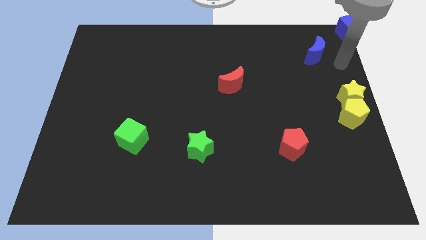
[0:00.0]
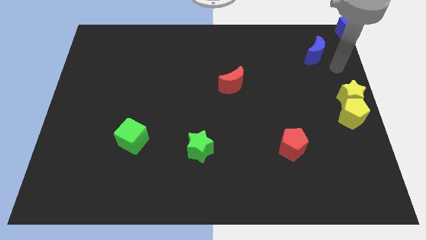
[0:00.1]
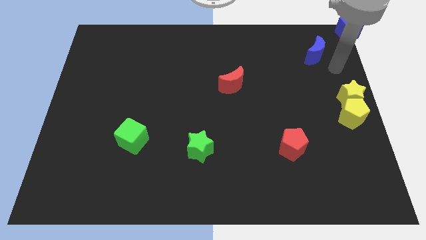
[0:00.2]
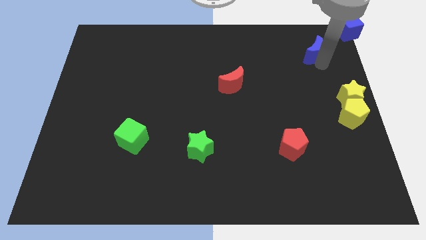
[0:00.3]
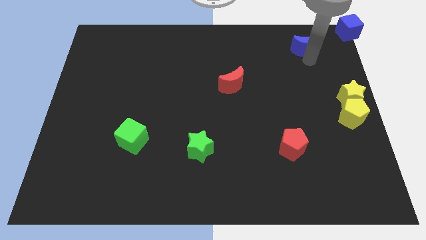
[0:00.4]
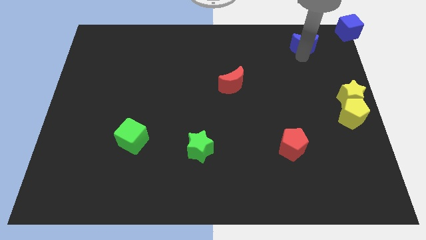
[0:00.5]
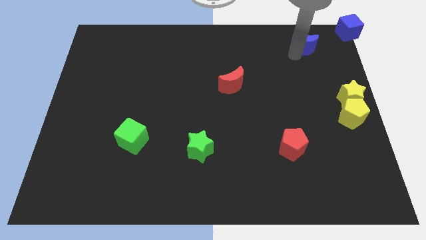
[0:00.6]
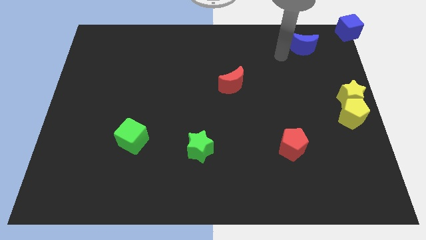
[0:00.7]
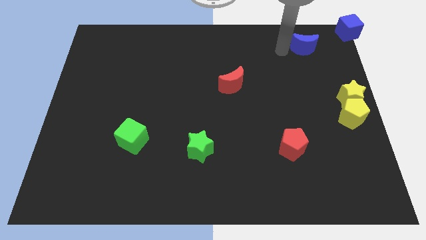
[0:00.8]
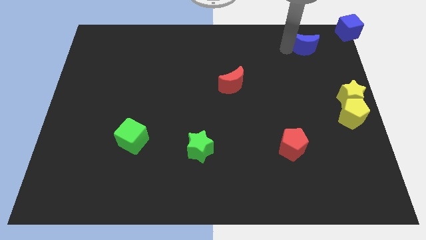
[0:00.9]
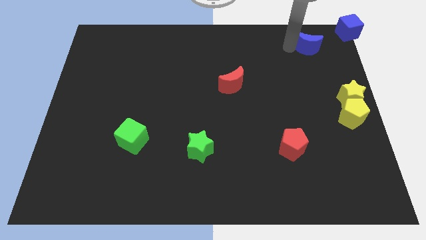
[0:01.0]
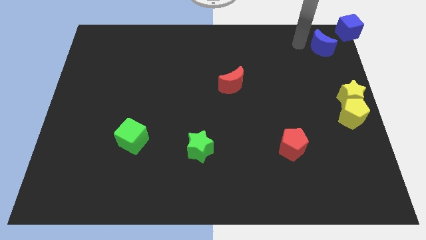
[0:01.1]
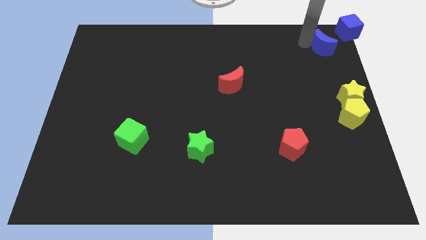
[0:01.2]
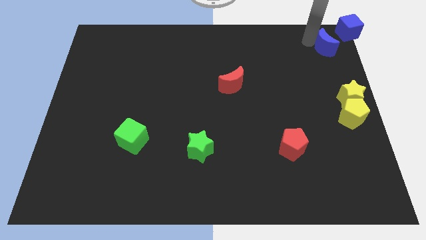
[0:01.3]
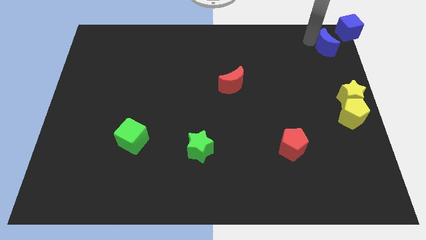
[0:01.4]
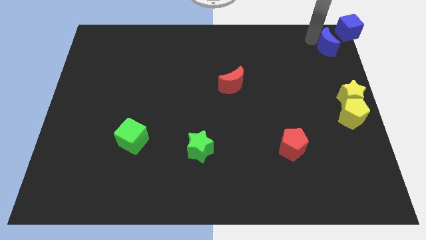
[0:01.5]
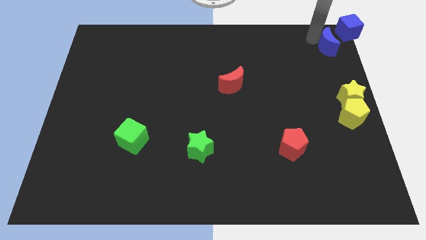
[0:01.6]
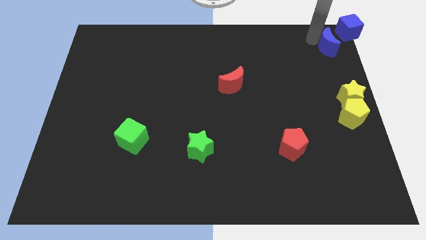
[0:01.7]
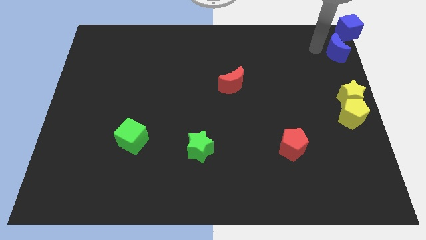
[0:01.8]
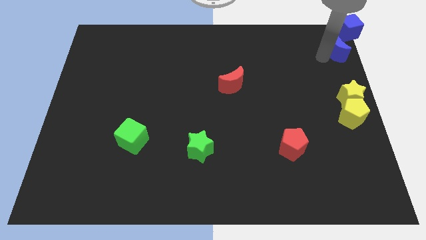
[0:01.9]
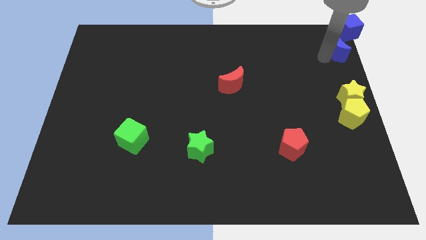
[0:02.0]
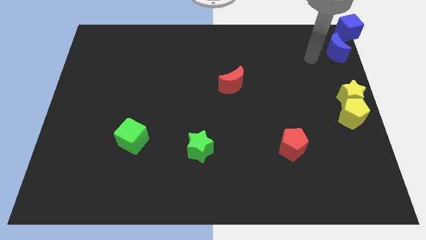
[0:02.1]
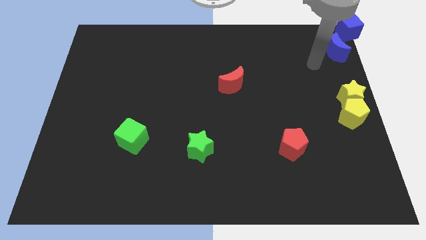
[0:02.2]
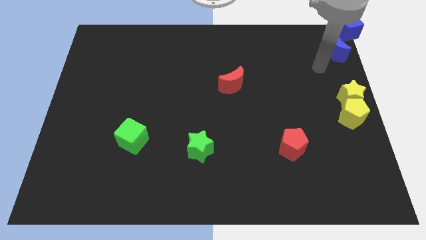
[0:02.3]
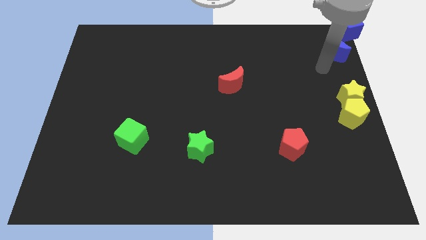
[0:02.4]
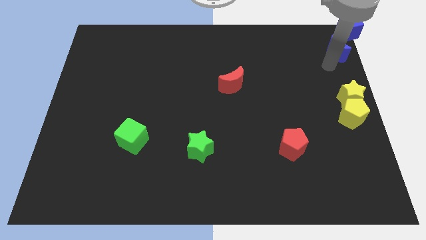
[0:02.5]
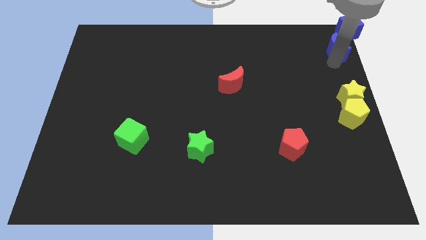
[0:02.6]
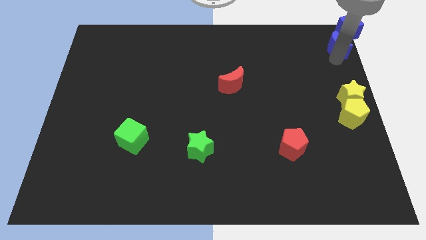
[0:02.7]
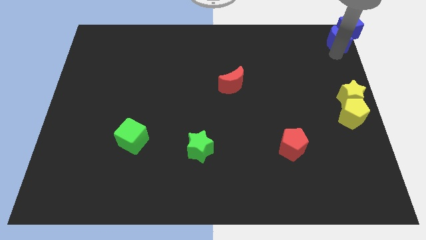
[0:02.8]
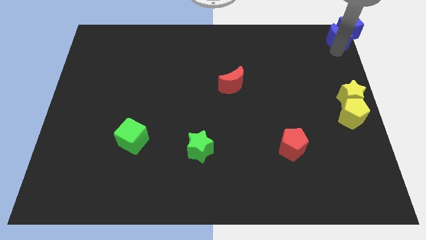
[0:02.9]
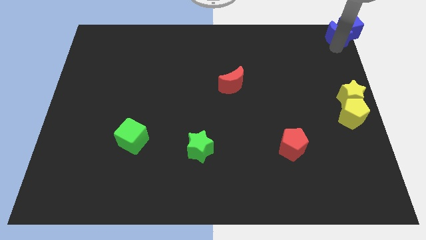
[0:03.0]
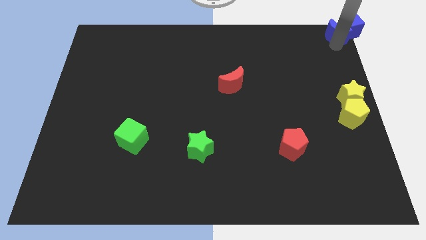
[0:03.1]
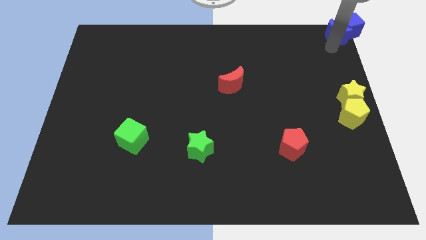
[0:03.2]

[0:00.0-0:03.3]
move the blue crescent to the bottom side of the blue cube

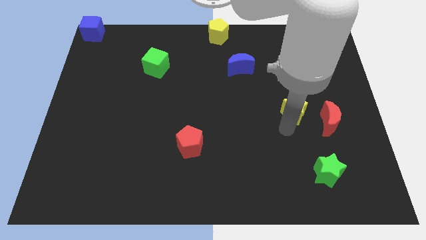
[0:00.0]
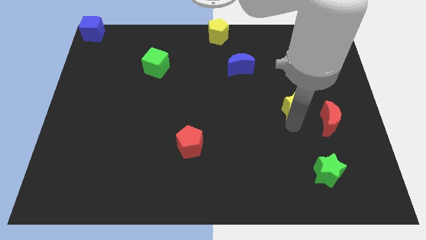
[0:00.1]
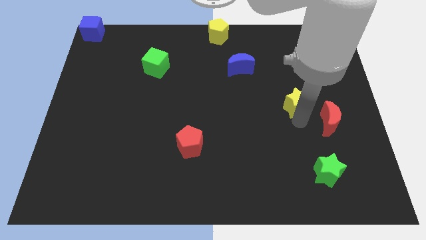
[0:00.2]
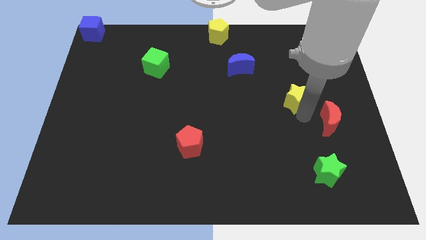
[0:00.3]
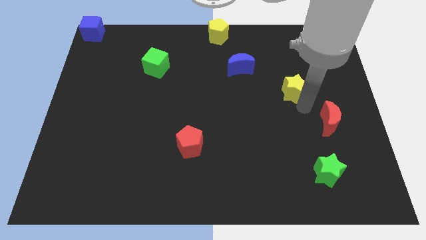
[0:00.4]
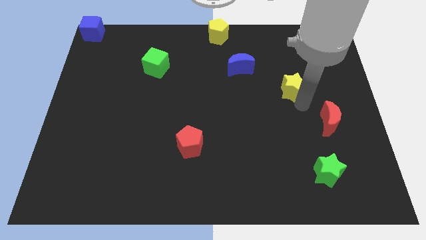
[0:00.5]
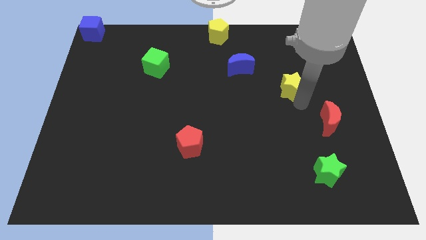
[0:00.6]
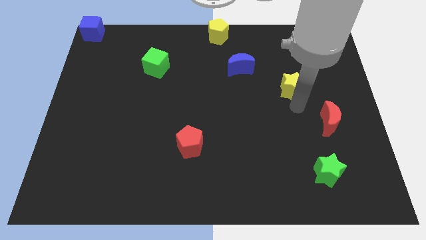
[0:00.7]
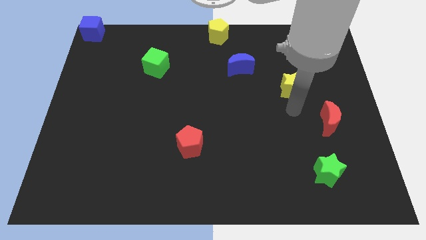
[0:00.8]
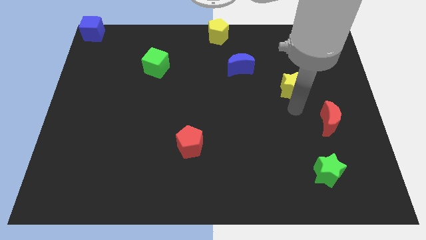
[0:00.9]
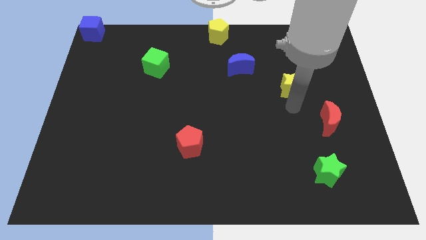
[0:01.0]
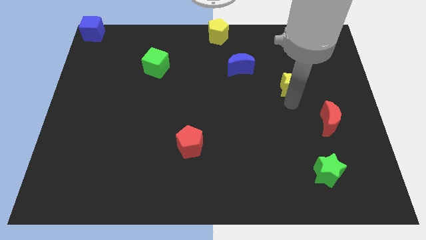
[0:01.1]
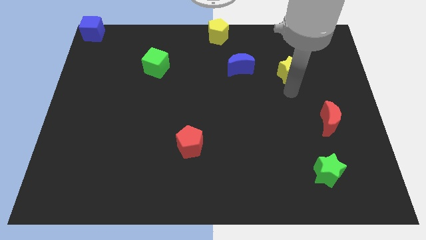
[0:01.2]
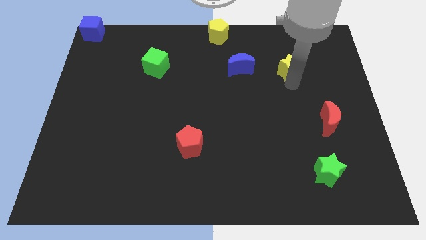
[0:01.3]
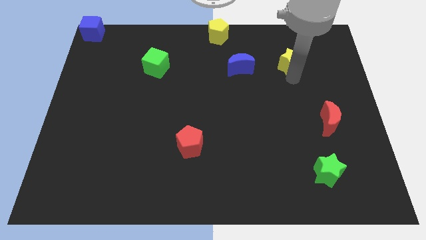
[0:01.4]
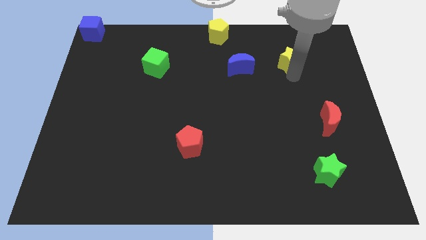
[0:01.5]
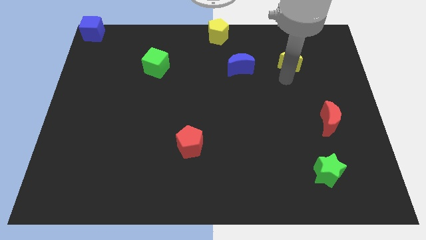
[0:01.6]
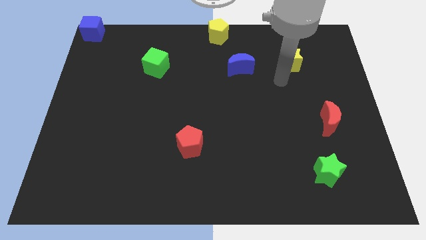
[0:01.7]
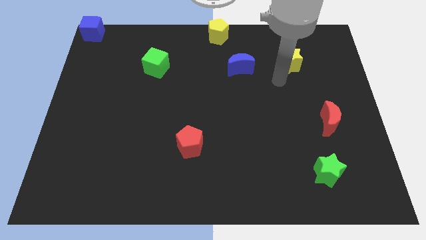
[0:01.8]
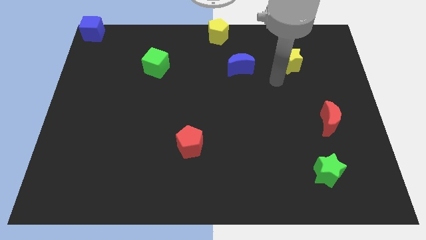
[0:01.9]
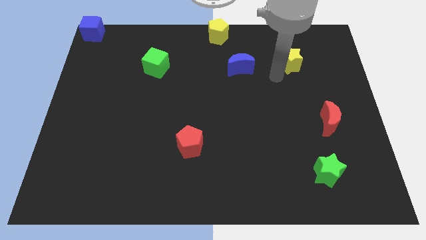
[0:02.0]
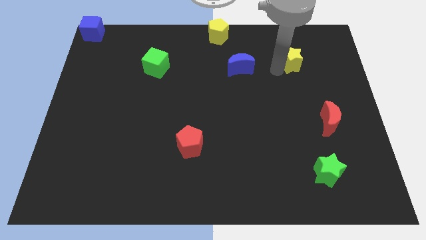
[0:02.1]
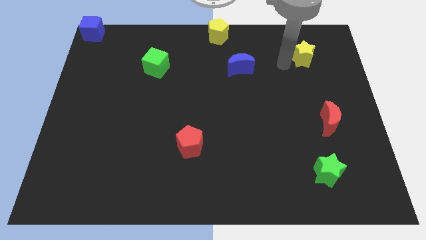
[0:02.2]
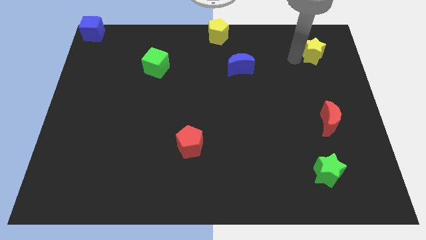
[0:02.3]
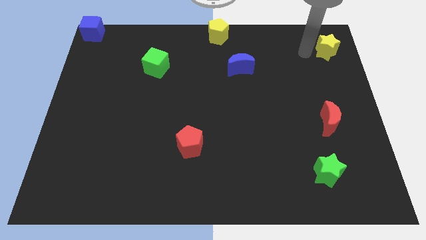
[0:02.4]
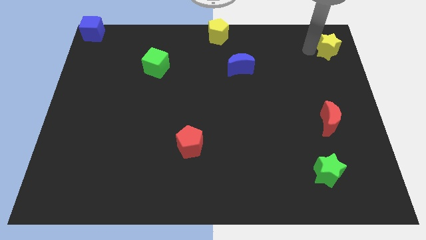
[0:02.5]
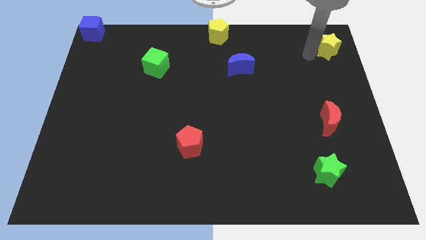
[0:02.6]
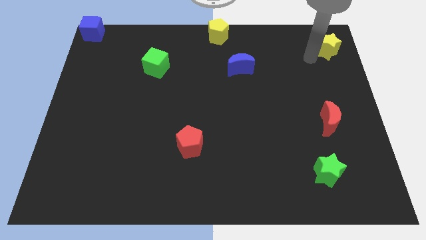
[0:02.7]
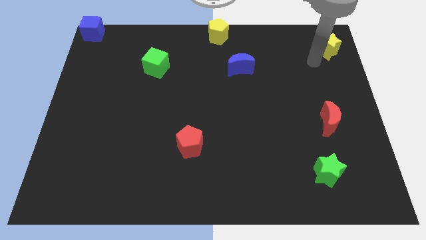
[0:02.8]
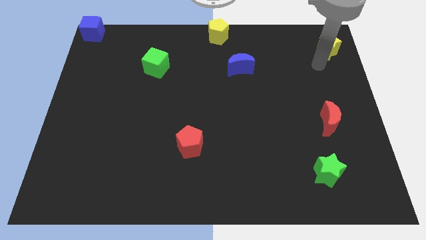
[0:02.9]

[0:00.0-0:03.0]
place the yellow star above the red moon

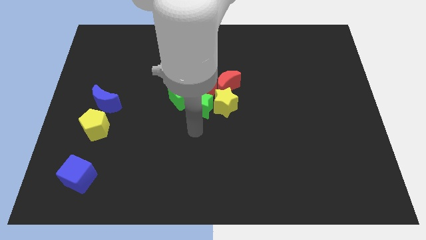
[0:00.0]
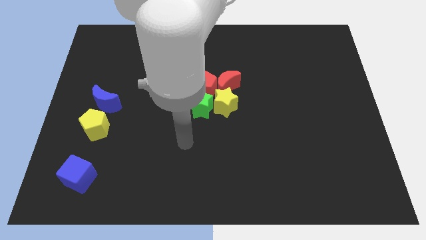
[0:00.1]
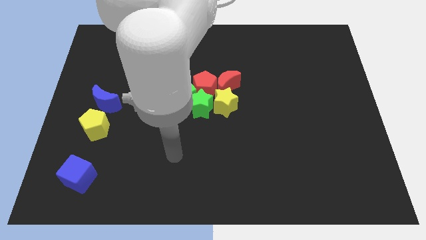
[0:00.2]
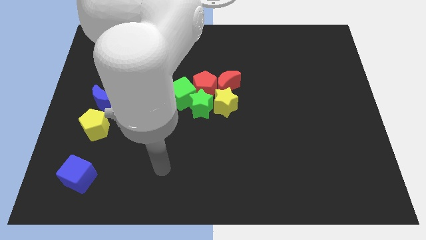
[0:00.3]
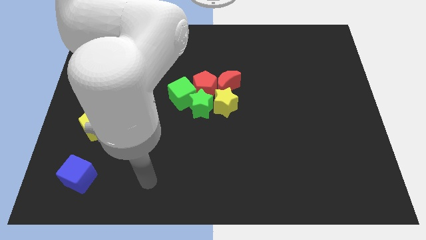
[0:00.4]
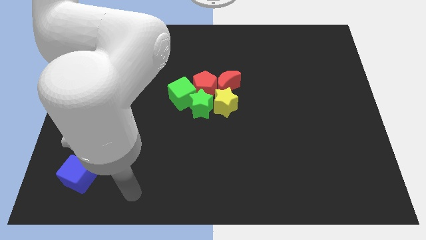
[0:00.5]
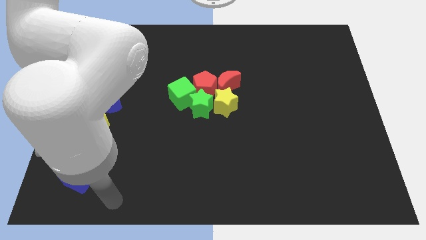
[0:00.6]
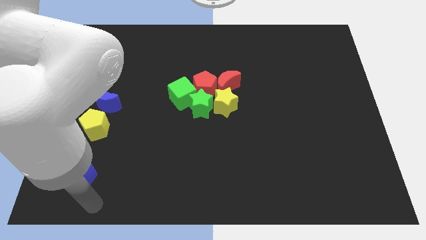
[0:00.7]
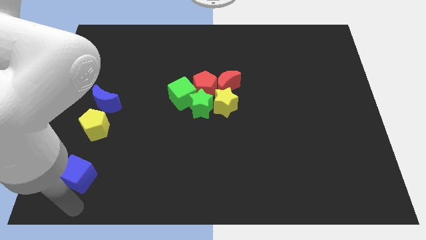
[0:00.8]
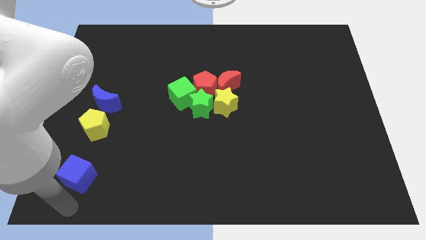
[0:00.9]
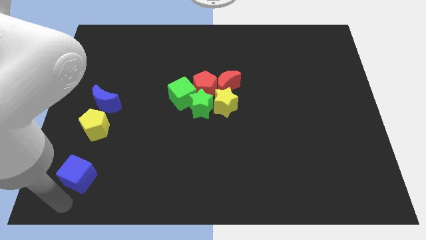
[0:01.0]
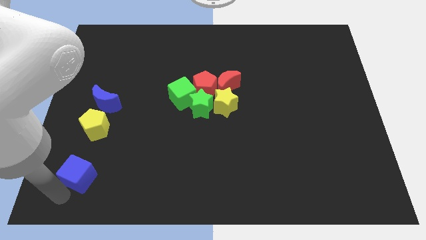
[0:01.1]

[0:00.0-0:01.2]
move your arm to the bottom of the blue cube

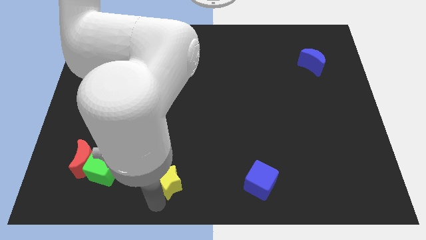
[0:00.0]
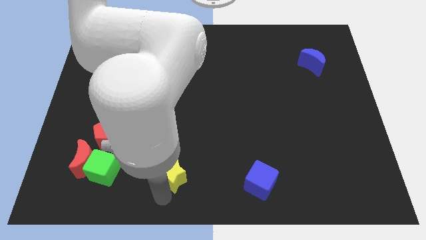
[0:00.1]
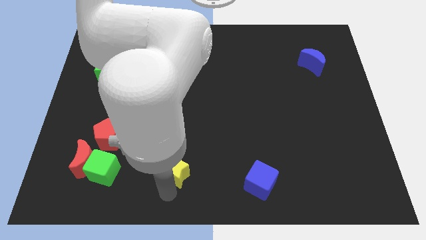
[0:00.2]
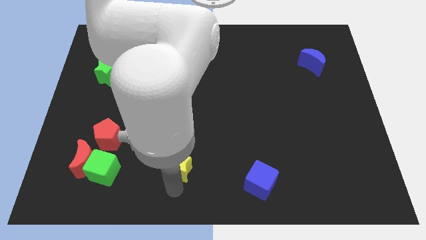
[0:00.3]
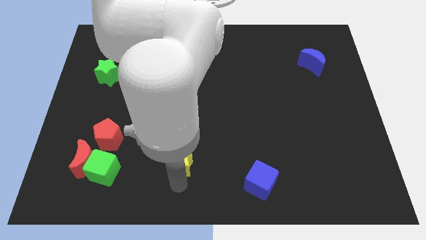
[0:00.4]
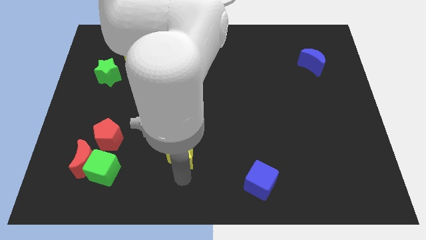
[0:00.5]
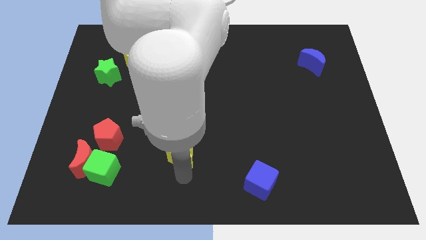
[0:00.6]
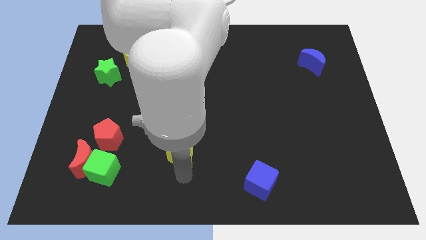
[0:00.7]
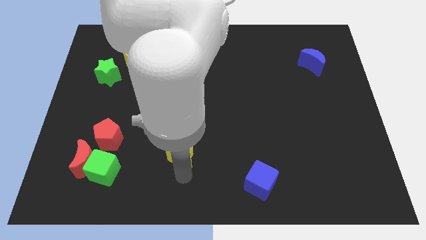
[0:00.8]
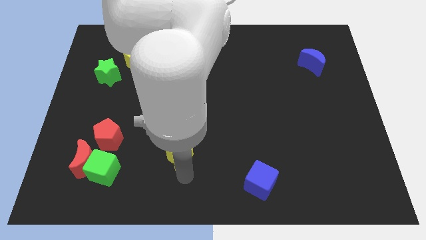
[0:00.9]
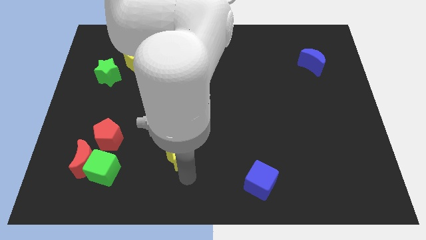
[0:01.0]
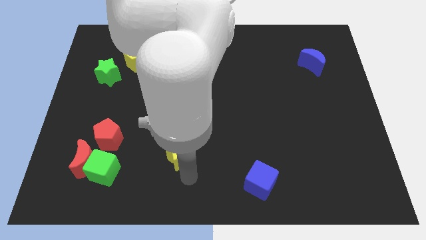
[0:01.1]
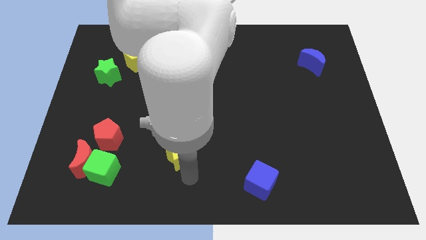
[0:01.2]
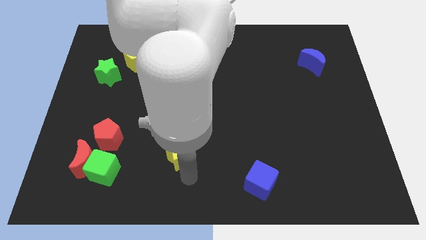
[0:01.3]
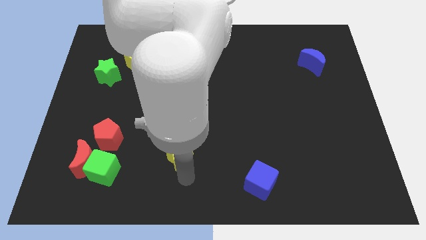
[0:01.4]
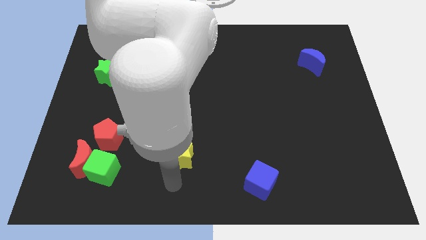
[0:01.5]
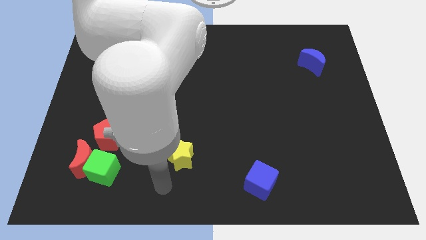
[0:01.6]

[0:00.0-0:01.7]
move the yellow star diagonal top left to the blue cube

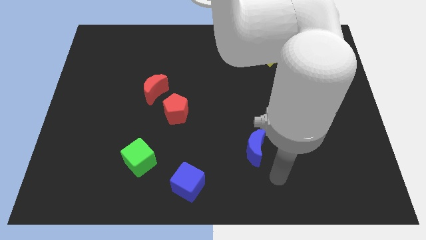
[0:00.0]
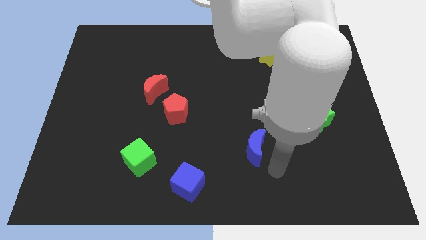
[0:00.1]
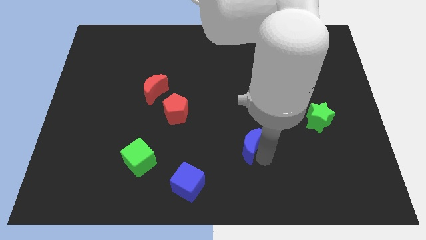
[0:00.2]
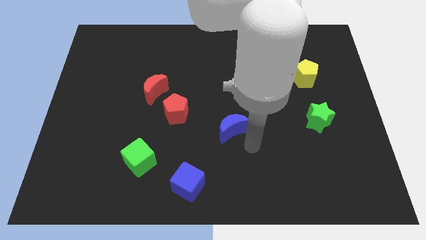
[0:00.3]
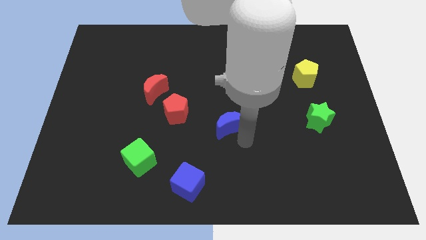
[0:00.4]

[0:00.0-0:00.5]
push the blue crescent diagonally to the green cube
